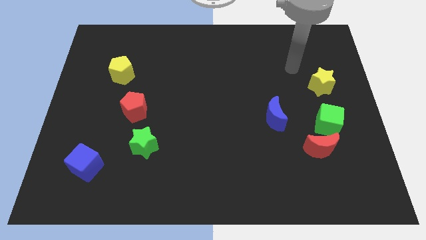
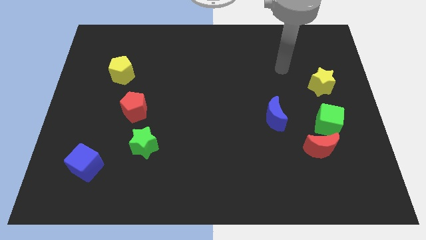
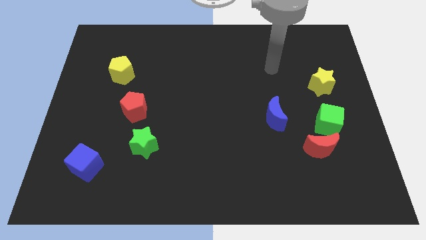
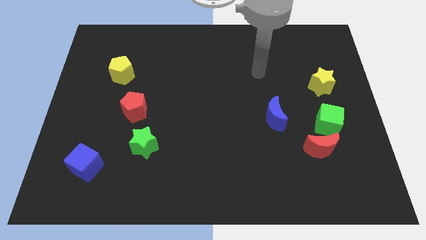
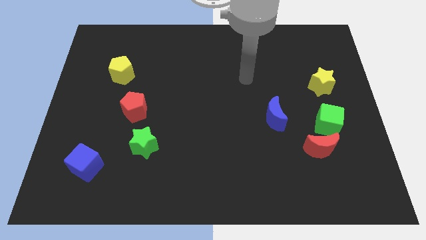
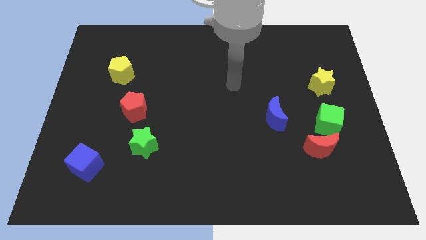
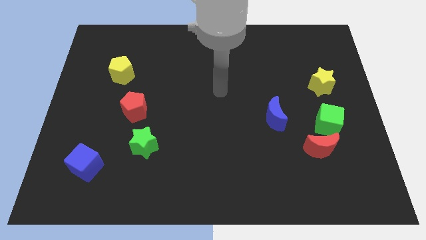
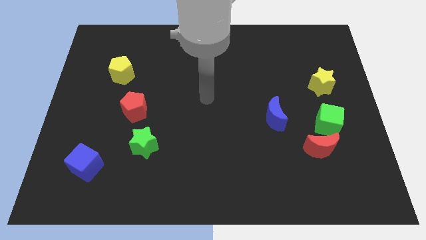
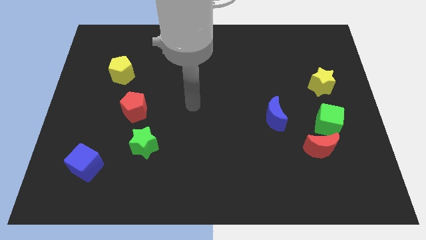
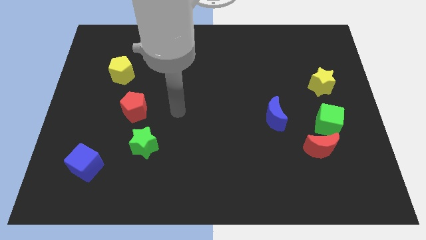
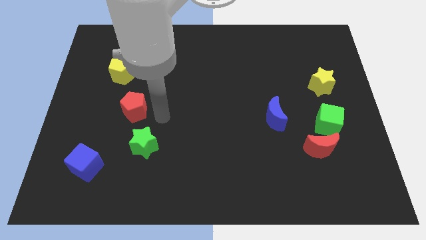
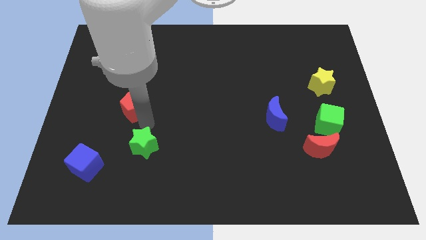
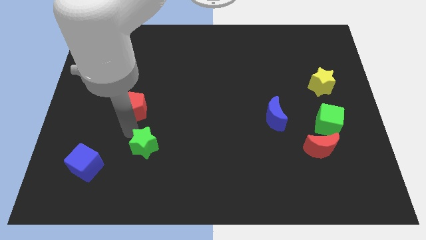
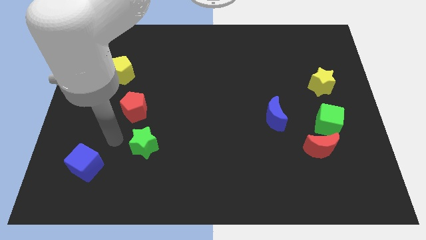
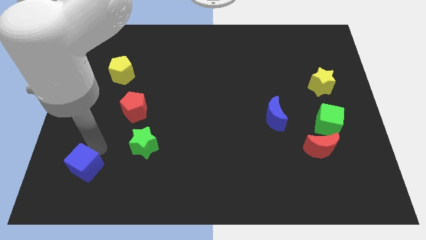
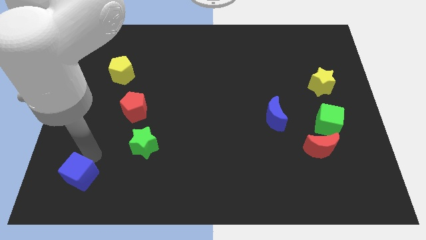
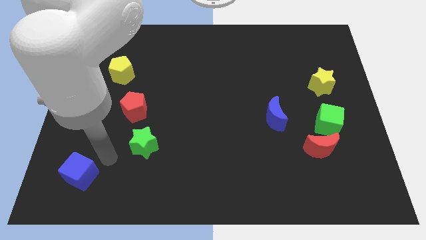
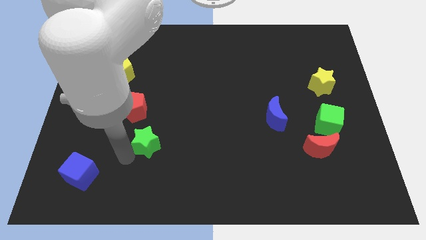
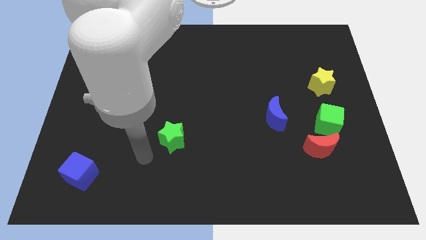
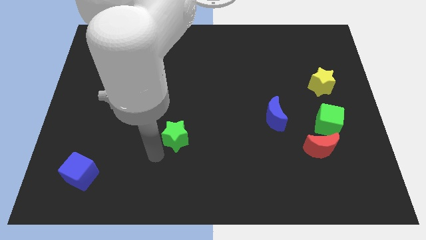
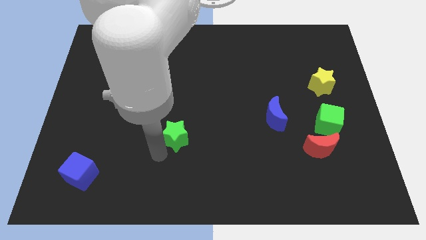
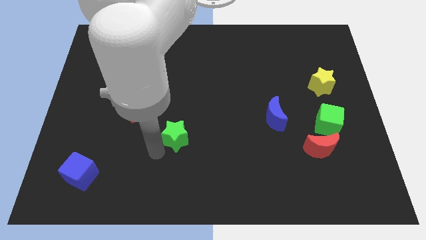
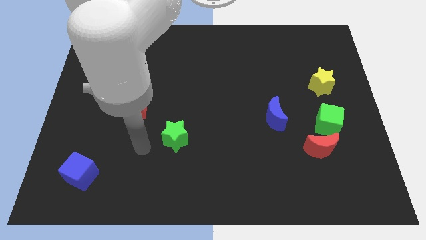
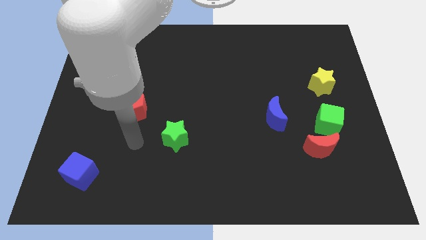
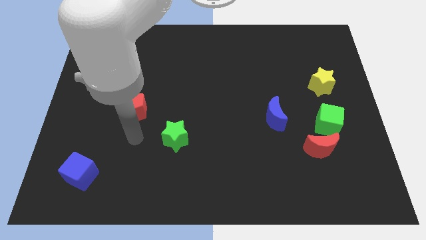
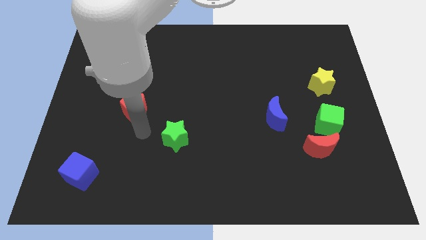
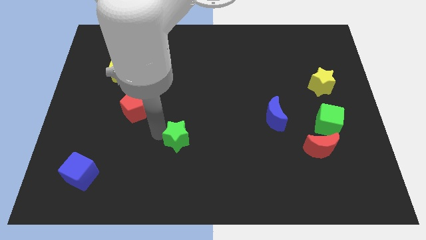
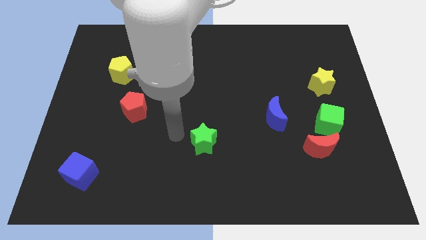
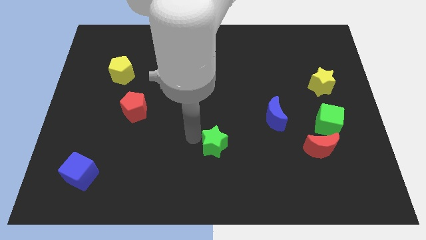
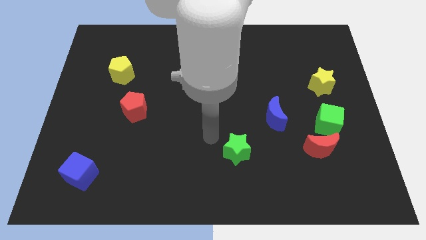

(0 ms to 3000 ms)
push the green star bottom left diagonal to the blue moon

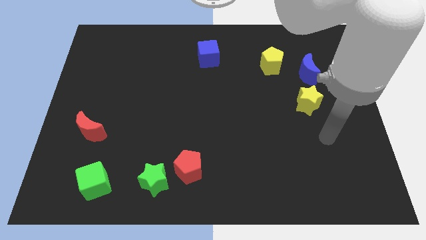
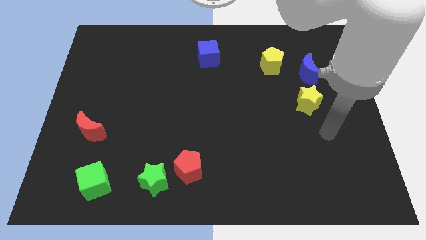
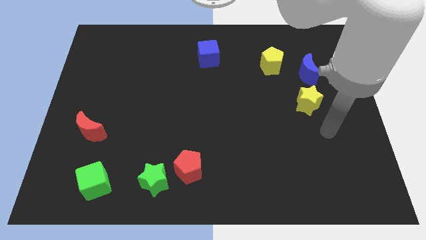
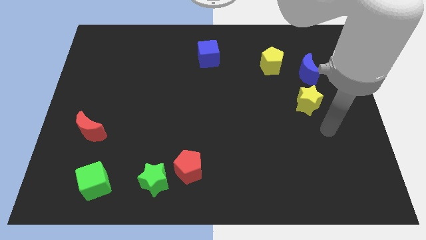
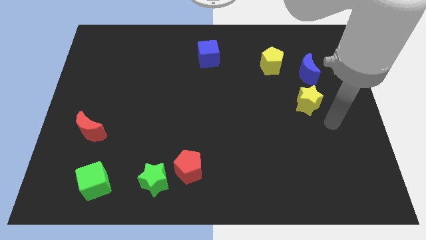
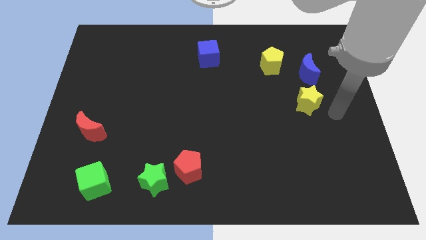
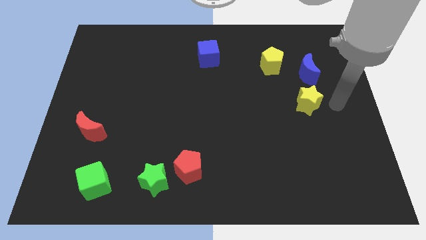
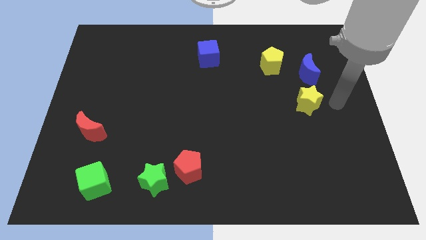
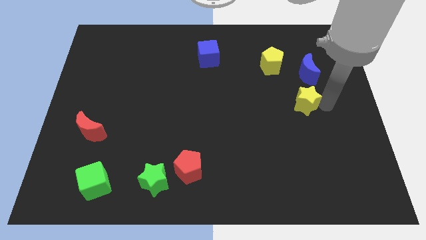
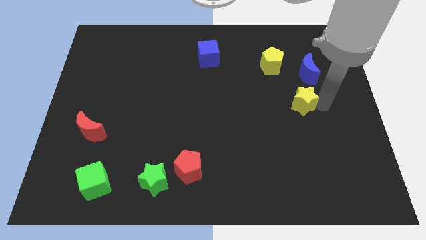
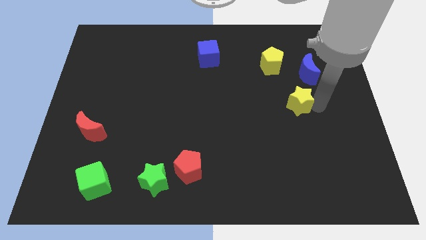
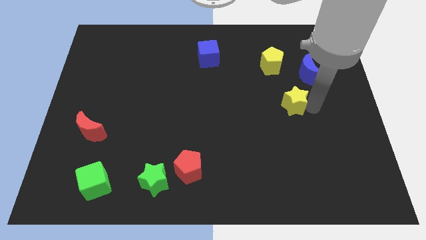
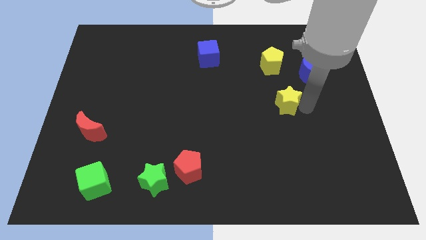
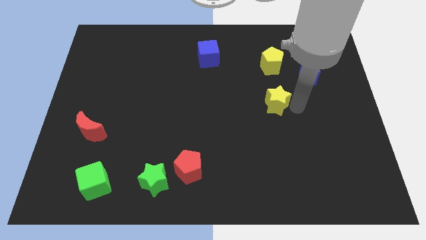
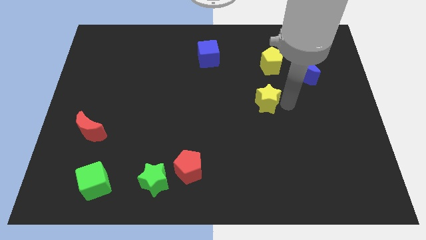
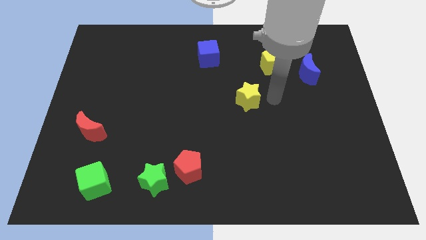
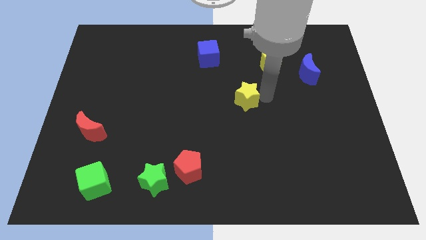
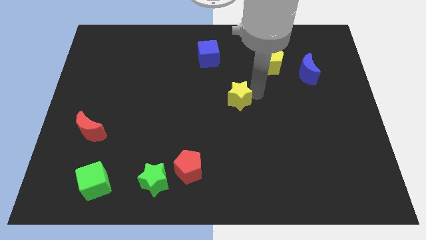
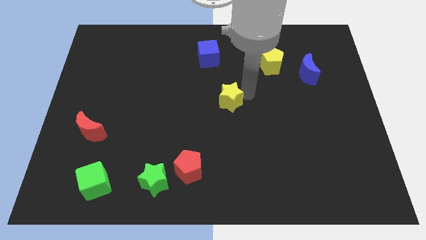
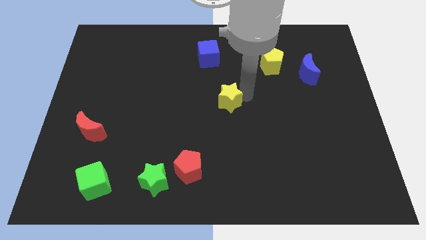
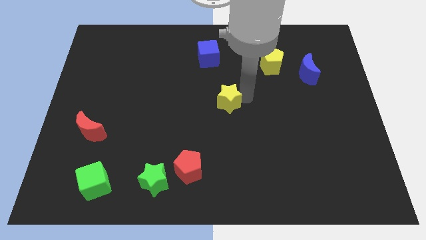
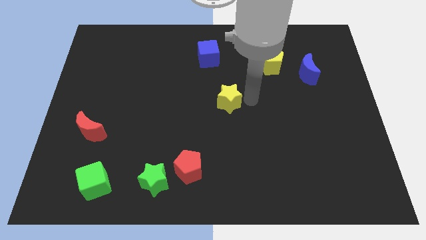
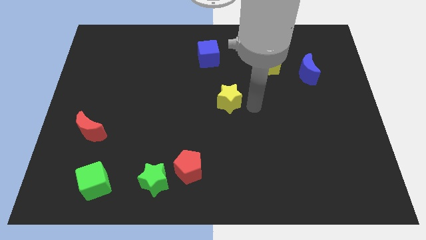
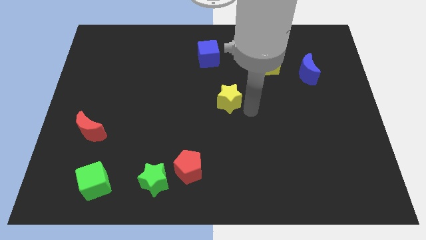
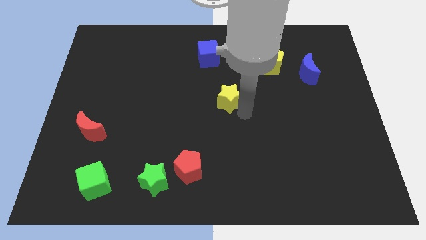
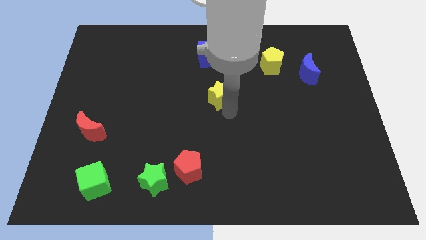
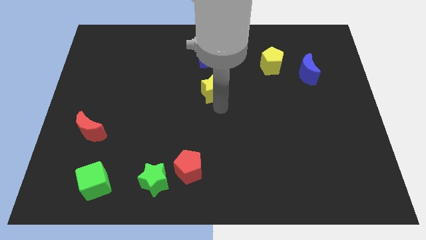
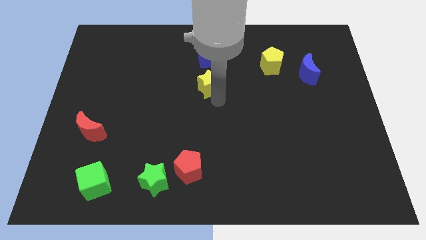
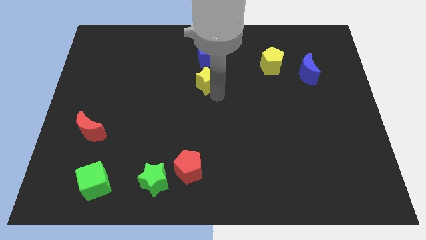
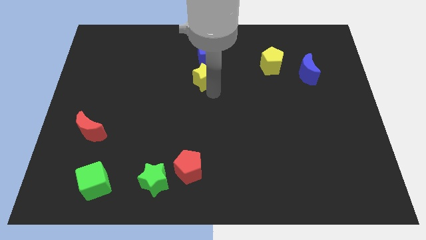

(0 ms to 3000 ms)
place the yellow star in between the blue cube and red pentagon

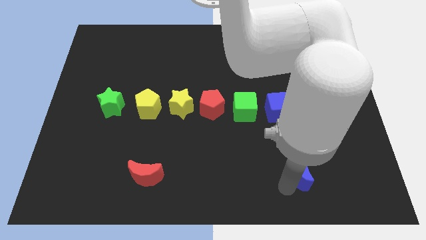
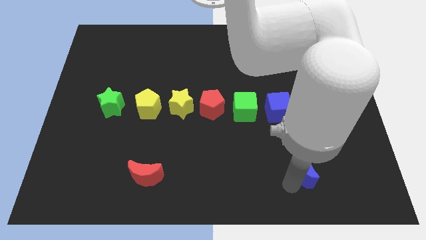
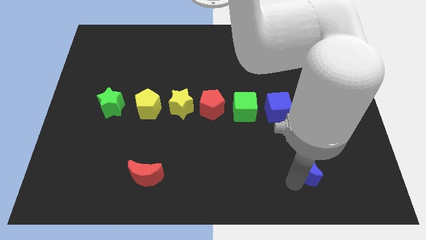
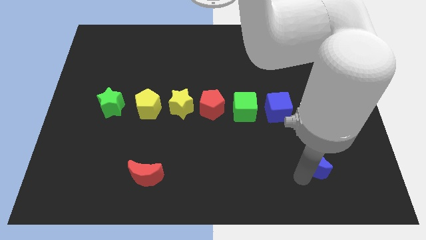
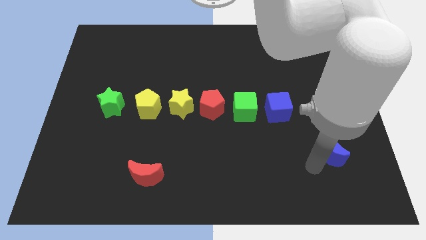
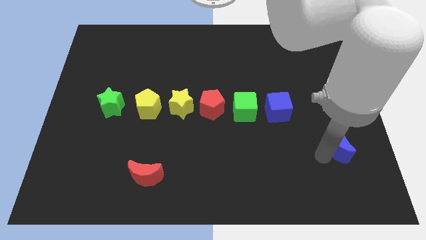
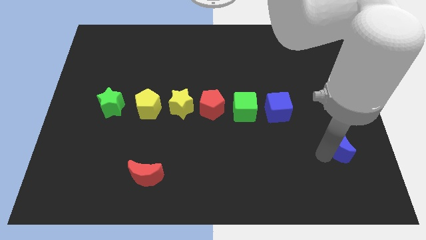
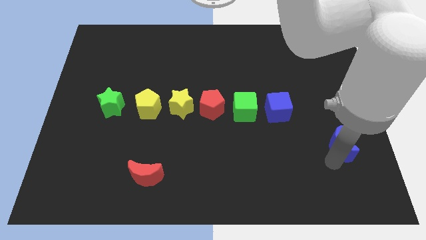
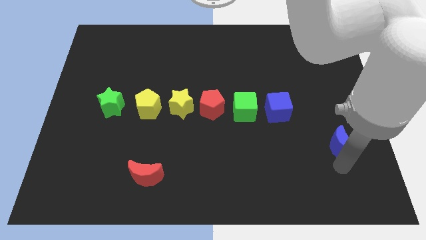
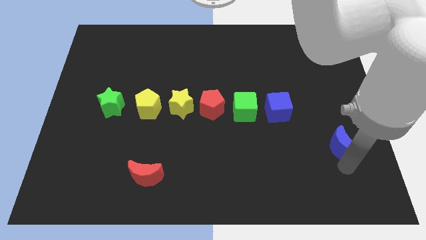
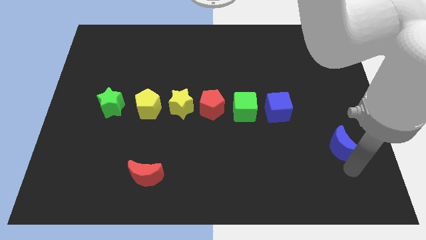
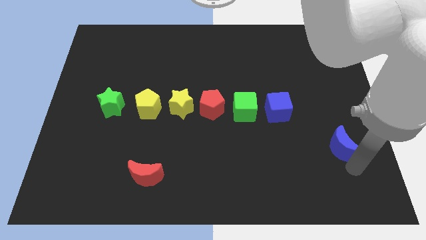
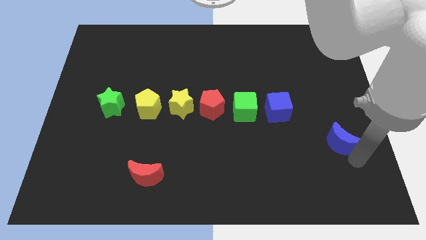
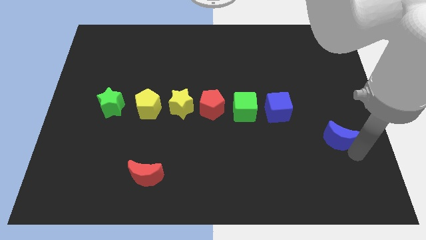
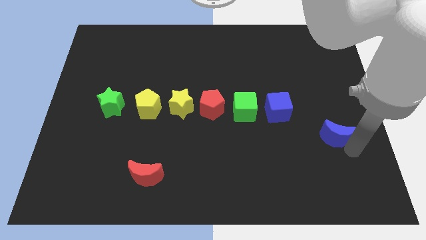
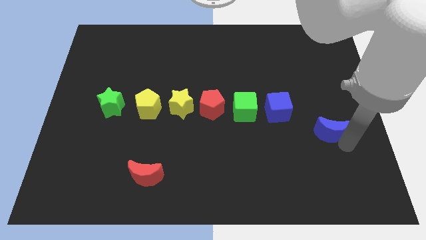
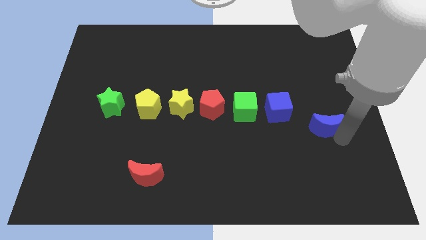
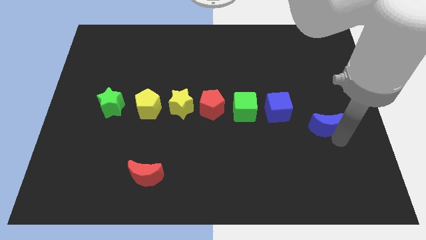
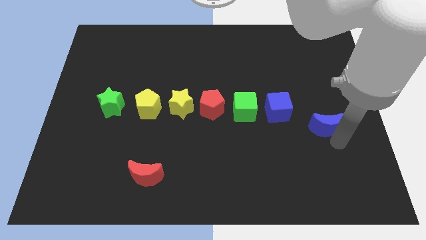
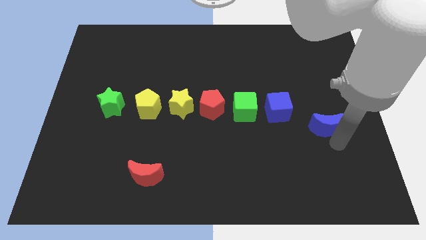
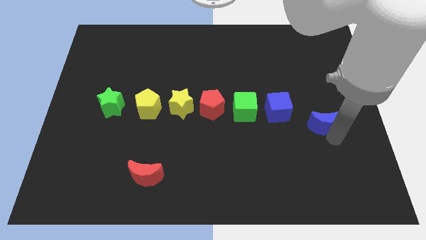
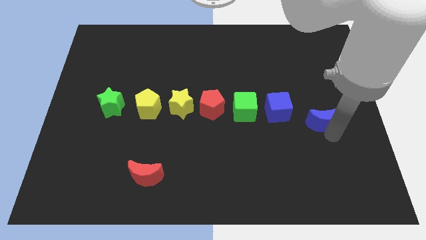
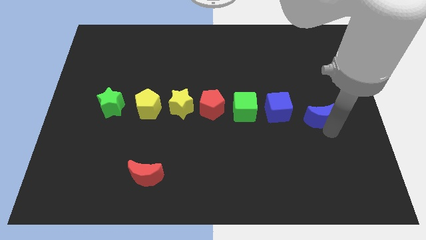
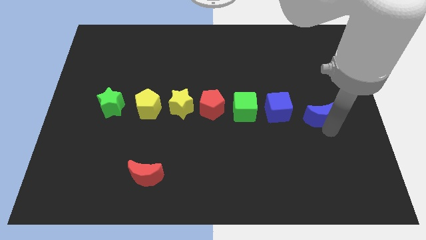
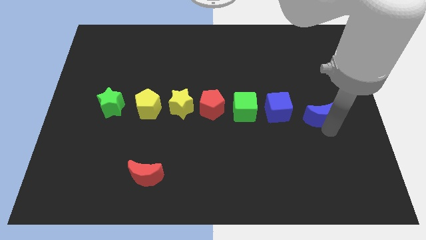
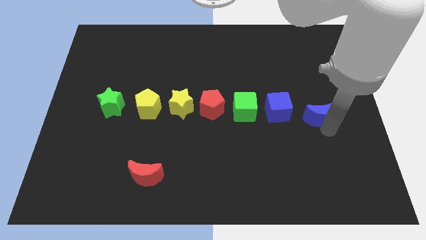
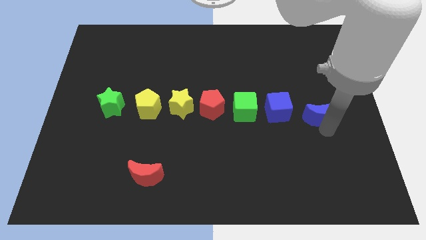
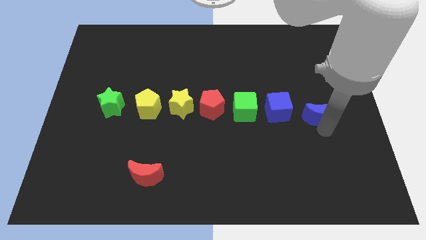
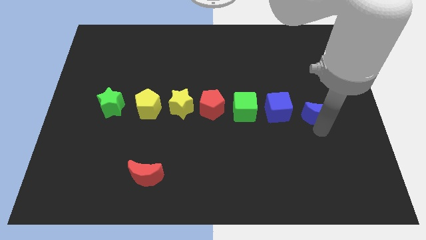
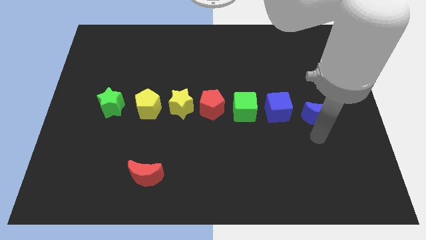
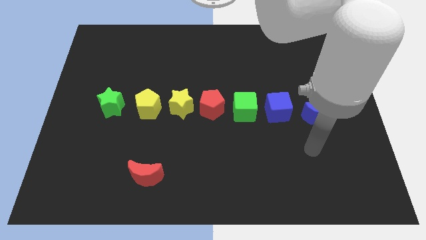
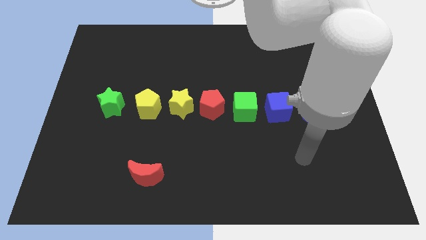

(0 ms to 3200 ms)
adjust the blue moon on the right side of the blue cube
